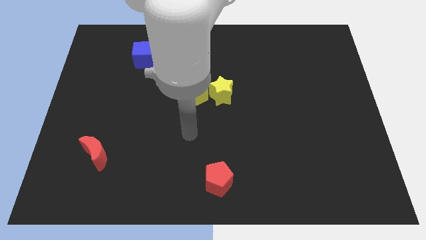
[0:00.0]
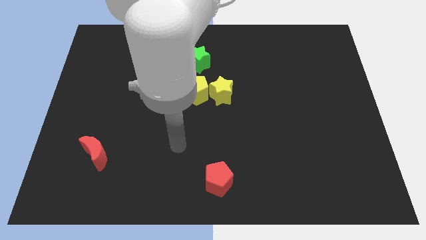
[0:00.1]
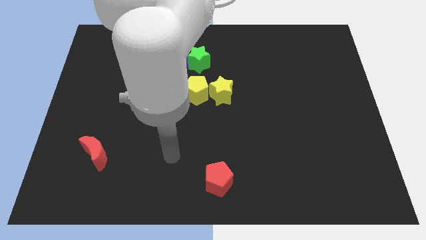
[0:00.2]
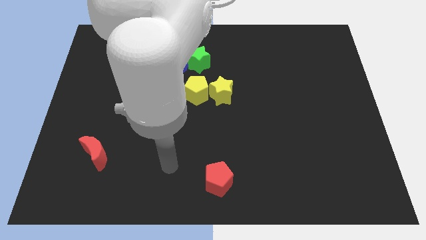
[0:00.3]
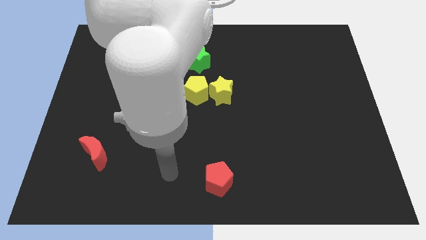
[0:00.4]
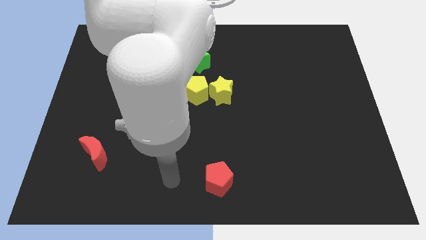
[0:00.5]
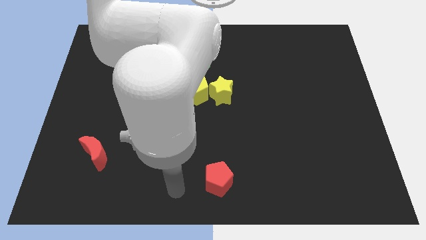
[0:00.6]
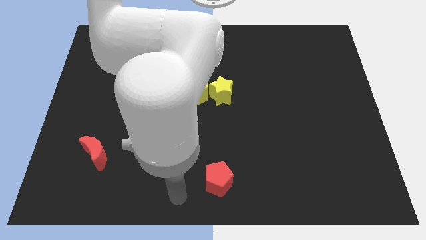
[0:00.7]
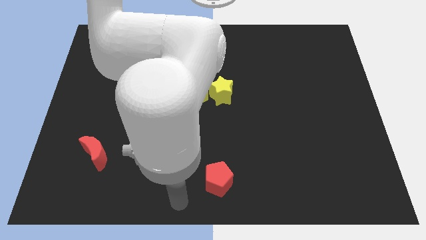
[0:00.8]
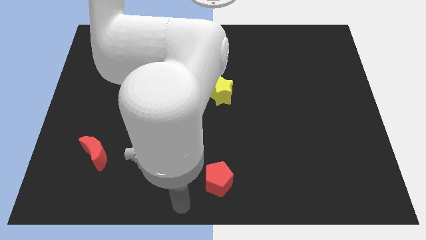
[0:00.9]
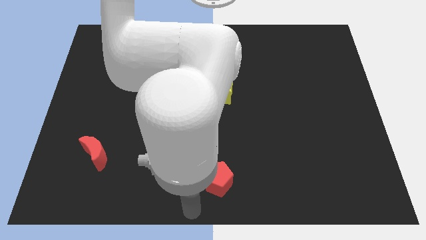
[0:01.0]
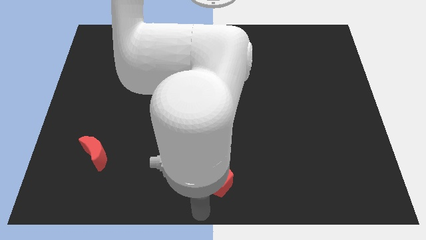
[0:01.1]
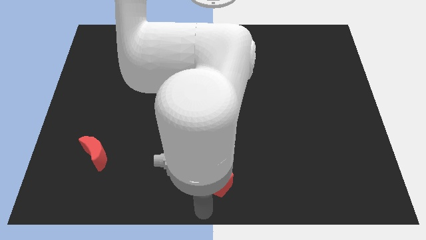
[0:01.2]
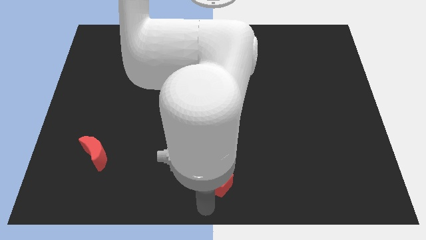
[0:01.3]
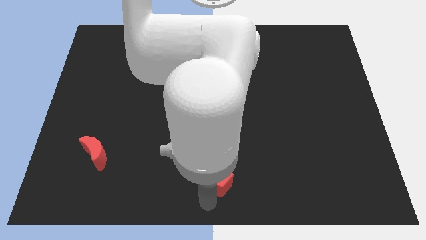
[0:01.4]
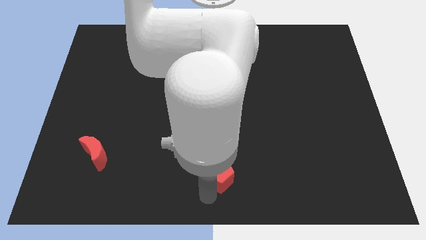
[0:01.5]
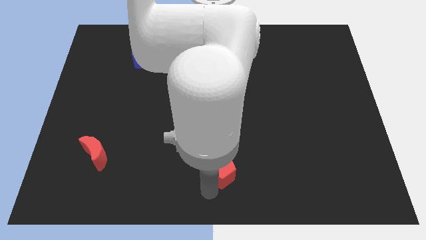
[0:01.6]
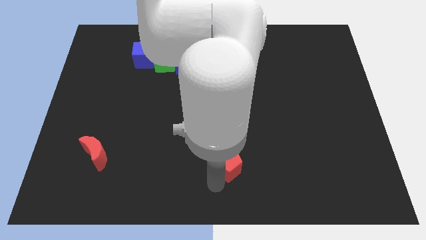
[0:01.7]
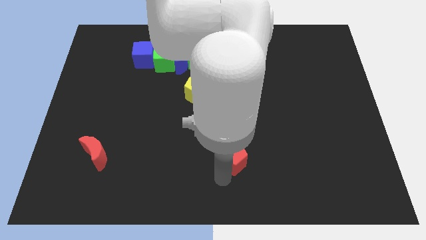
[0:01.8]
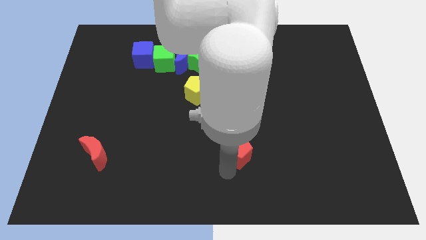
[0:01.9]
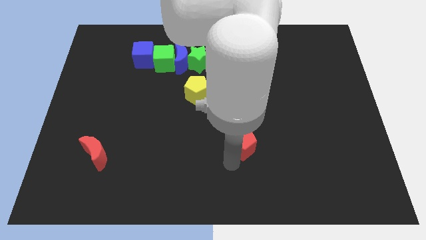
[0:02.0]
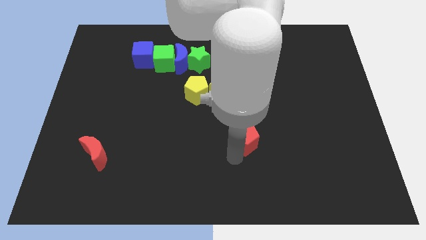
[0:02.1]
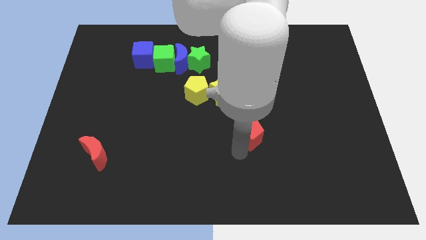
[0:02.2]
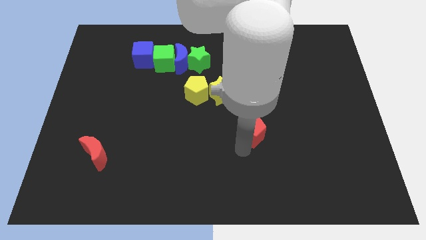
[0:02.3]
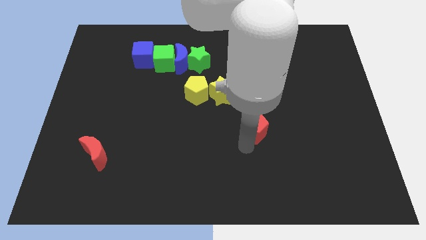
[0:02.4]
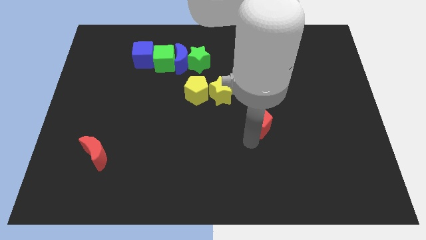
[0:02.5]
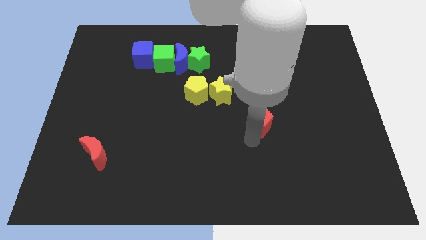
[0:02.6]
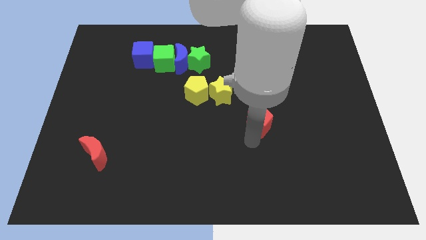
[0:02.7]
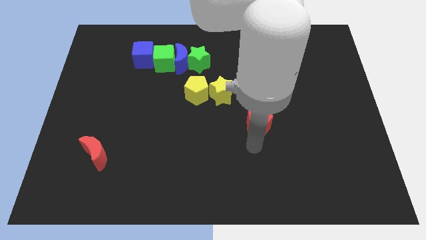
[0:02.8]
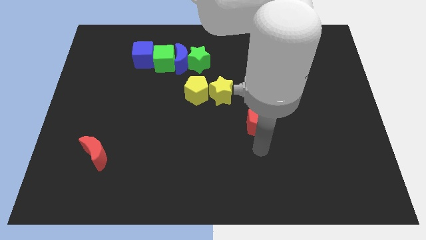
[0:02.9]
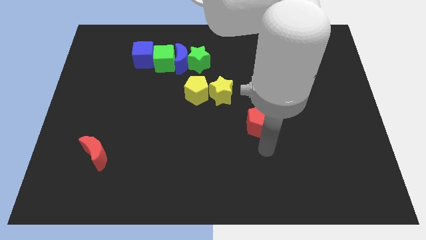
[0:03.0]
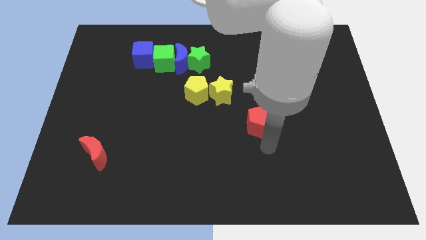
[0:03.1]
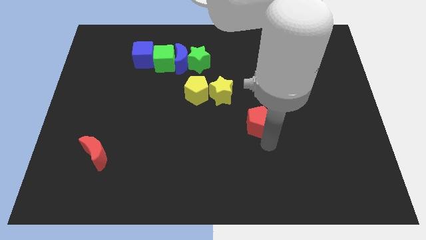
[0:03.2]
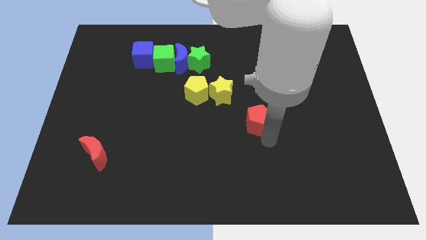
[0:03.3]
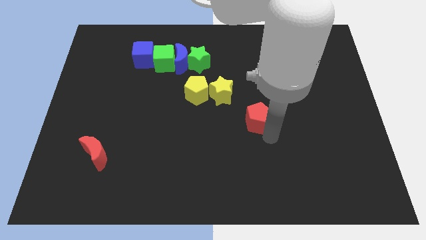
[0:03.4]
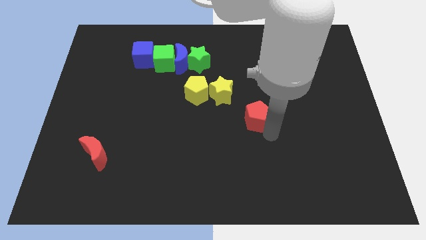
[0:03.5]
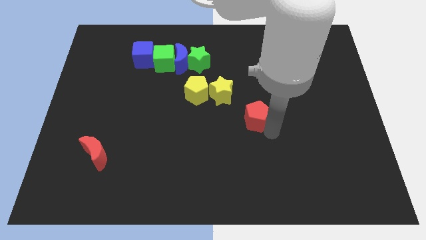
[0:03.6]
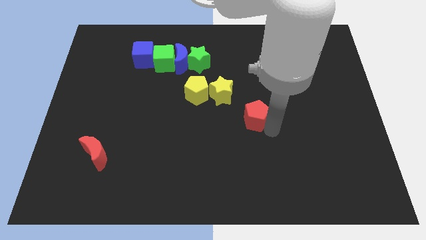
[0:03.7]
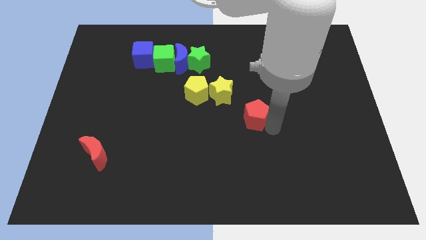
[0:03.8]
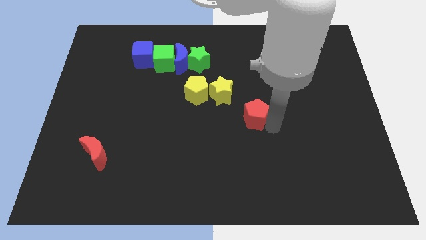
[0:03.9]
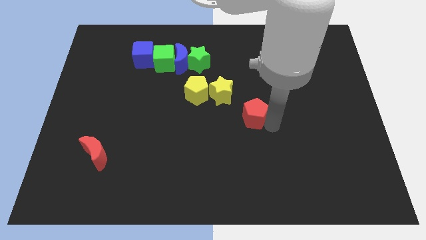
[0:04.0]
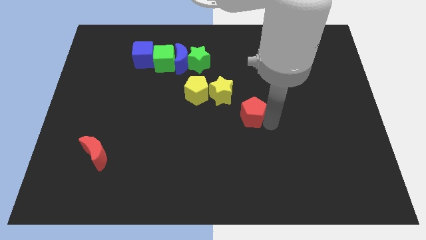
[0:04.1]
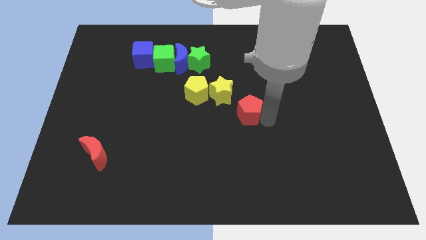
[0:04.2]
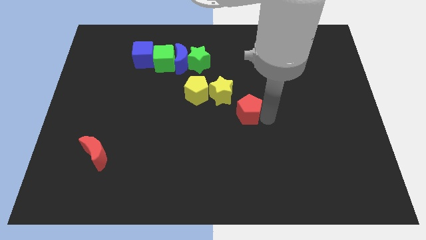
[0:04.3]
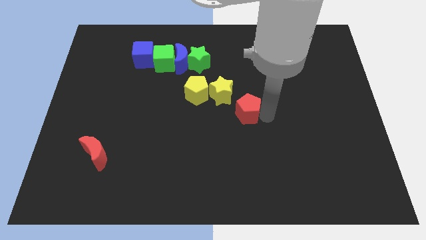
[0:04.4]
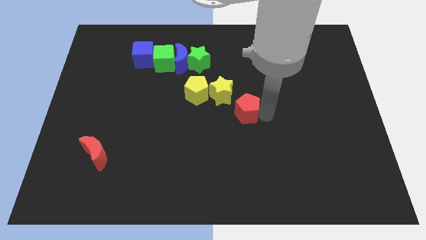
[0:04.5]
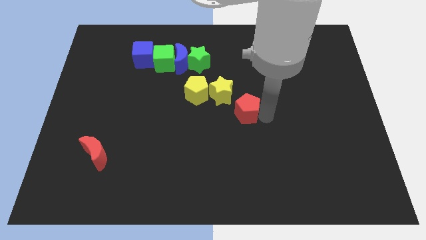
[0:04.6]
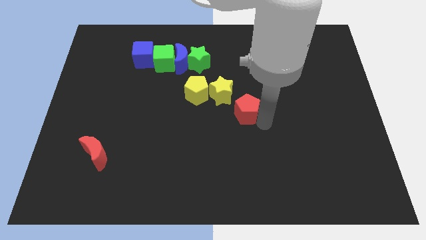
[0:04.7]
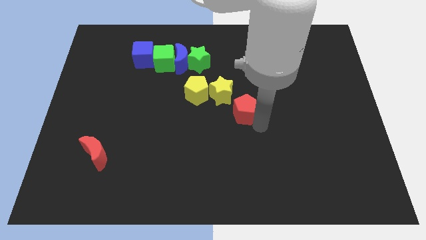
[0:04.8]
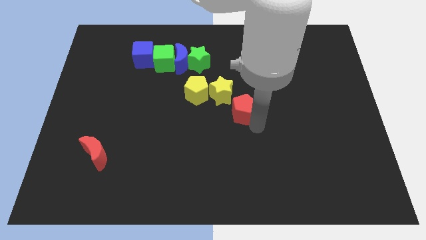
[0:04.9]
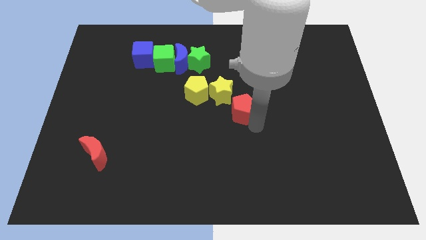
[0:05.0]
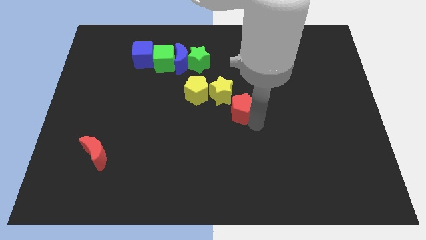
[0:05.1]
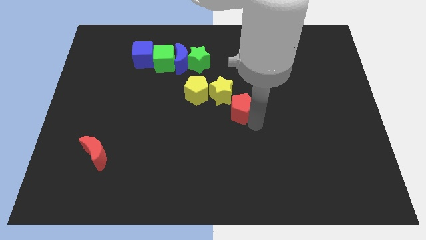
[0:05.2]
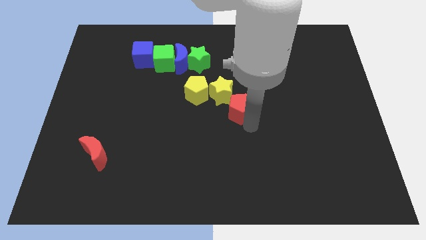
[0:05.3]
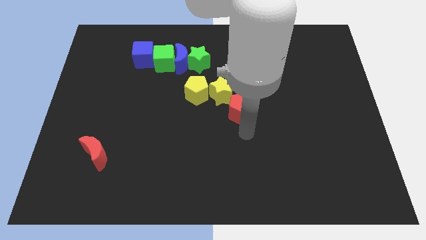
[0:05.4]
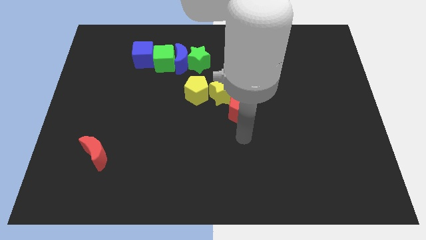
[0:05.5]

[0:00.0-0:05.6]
movethe red pentagon diagonally bottom right of the yellow star

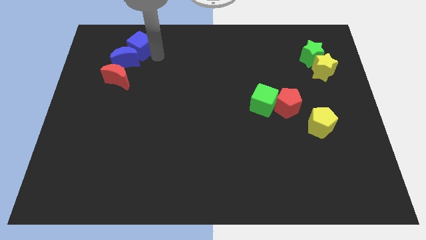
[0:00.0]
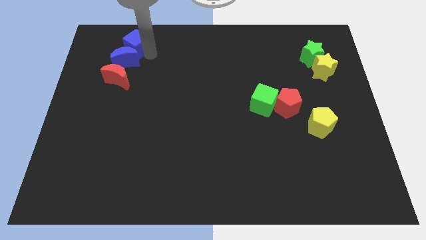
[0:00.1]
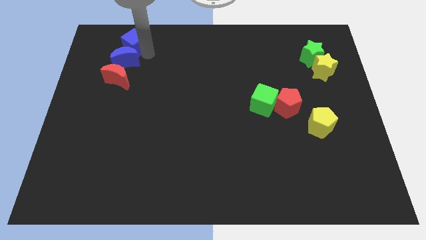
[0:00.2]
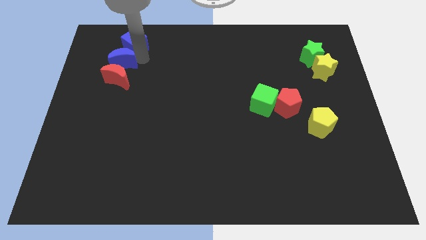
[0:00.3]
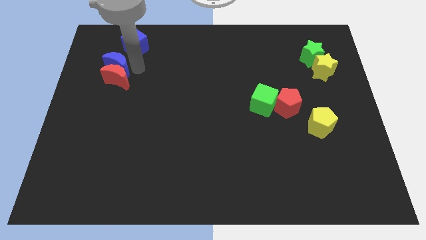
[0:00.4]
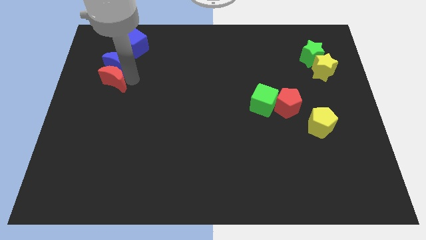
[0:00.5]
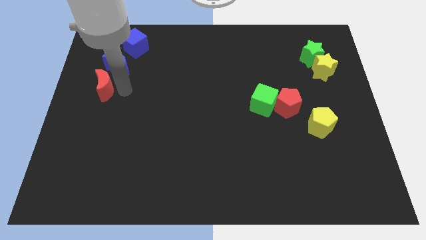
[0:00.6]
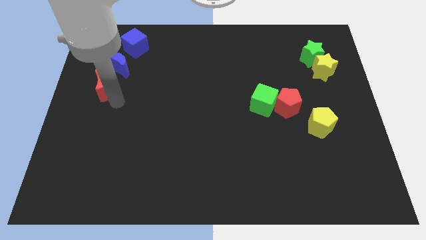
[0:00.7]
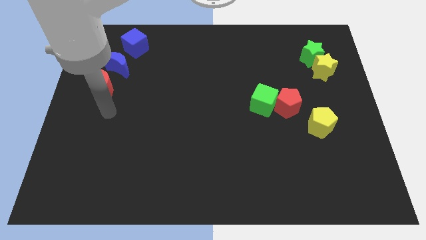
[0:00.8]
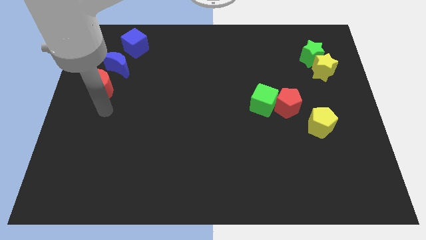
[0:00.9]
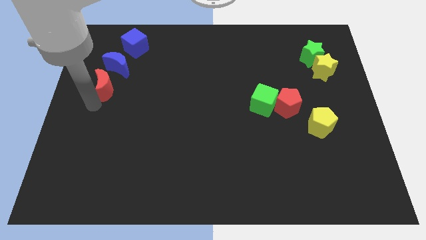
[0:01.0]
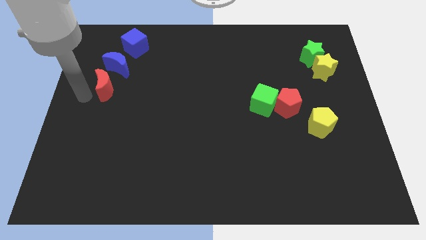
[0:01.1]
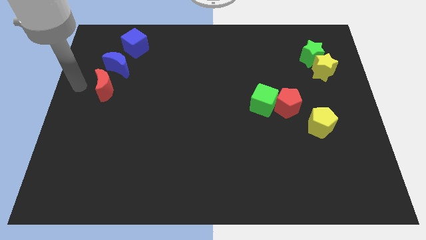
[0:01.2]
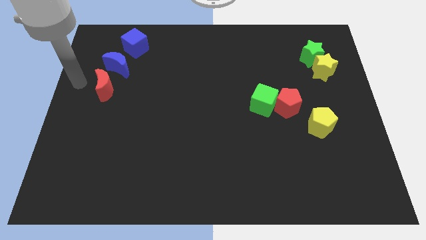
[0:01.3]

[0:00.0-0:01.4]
make a diagonal line by moving the red block blue moon and blue cube

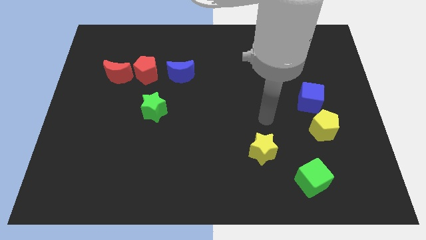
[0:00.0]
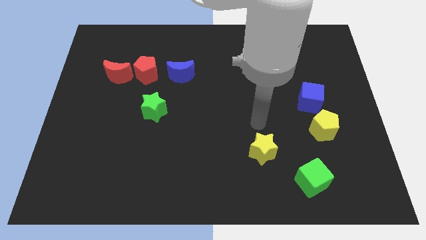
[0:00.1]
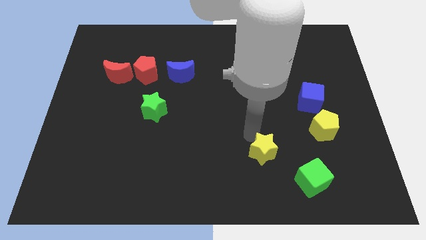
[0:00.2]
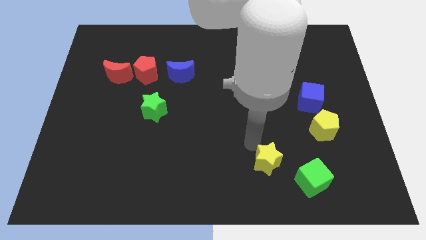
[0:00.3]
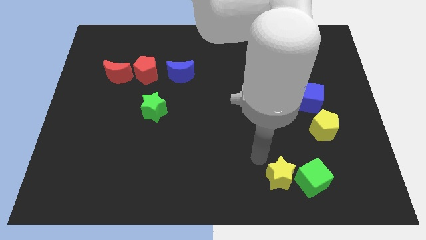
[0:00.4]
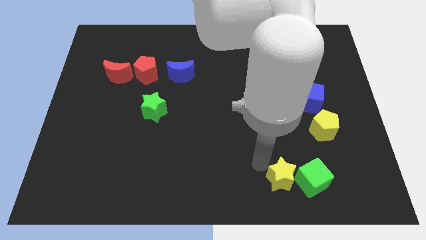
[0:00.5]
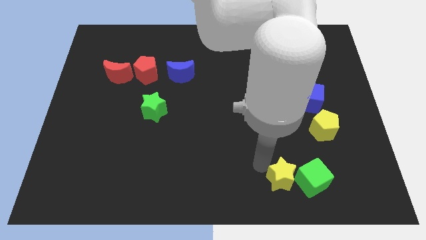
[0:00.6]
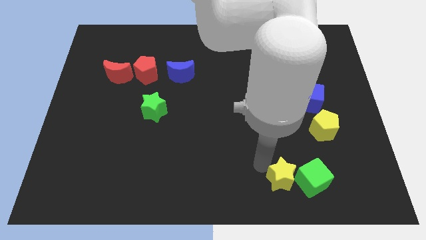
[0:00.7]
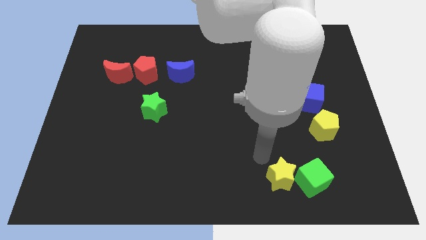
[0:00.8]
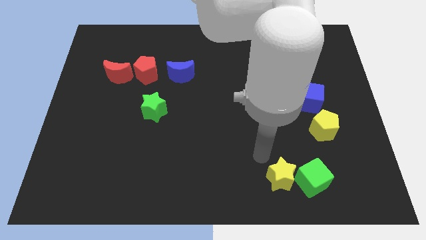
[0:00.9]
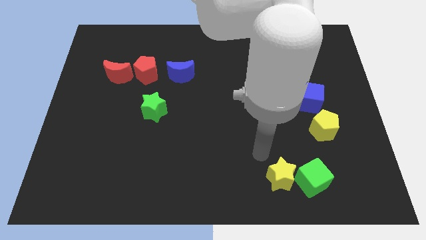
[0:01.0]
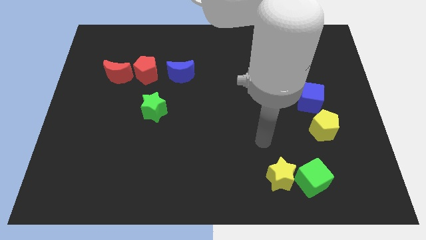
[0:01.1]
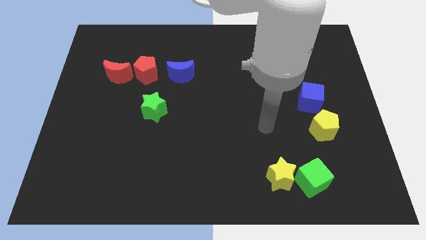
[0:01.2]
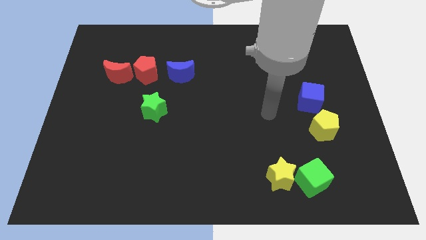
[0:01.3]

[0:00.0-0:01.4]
place the yellow star left to the green cube

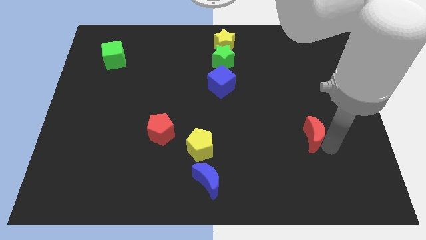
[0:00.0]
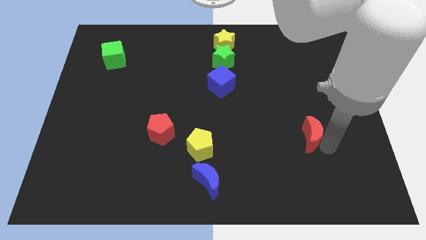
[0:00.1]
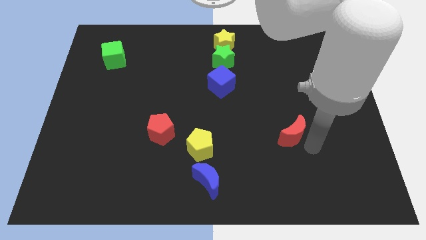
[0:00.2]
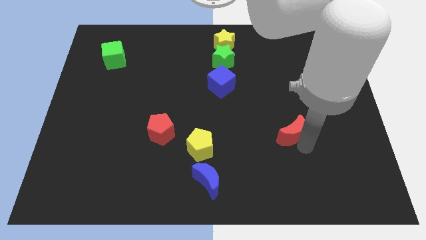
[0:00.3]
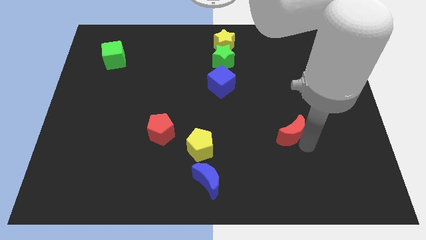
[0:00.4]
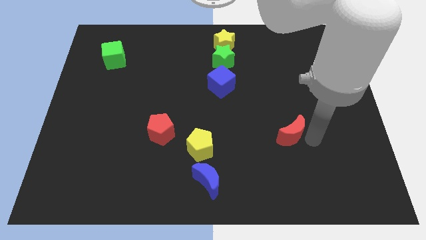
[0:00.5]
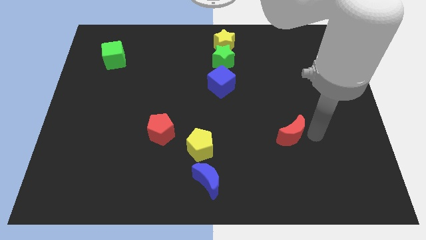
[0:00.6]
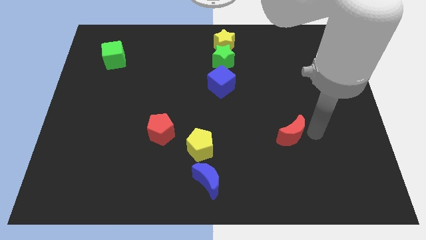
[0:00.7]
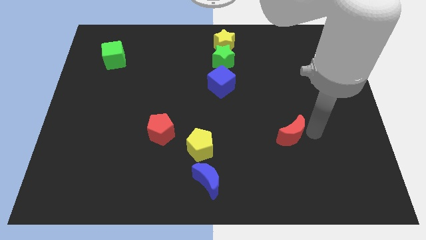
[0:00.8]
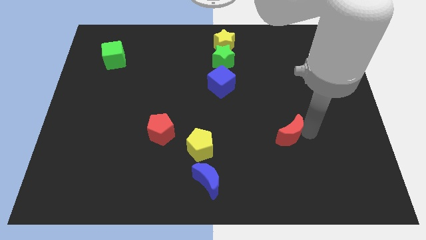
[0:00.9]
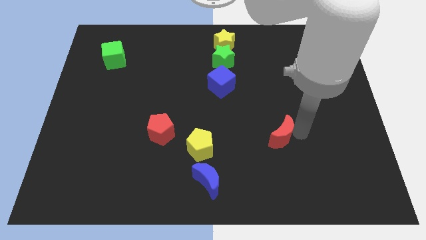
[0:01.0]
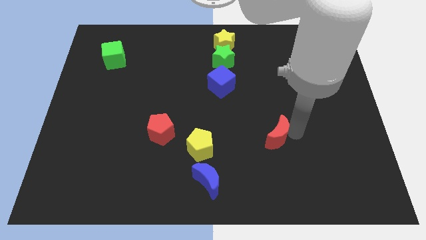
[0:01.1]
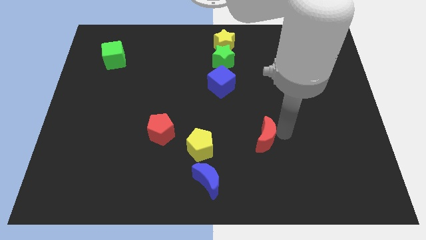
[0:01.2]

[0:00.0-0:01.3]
move the red crescent slightly to the left
